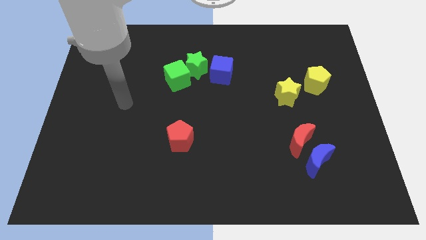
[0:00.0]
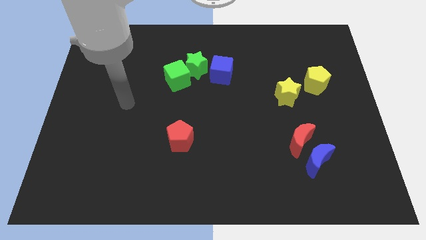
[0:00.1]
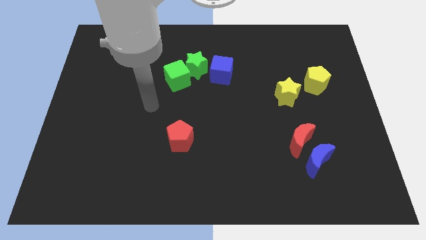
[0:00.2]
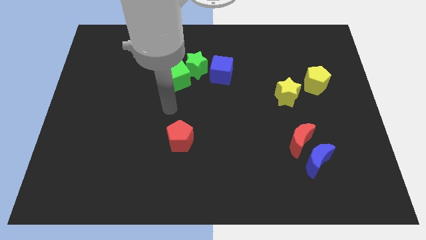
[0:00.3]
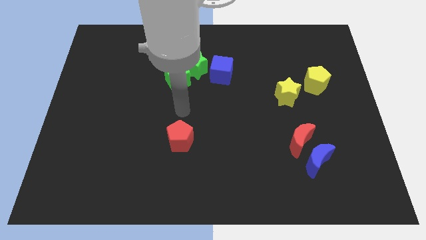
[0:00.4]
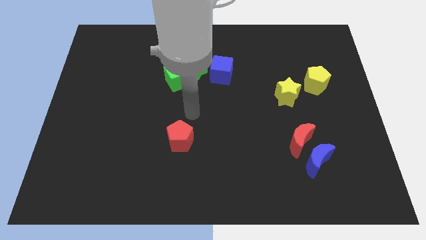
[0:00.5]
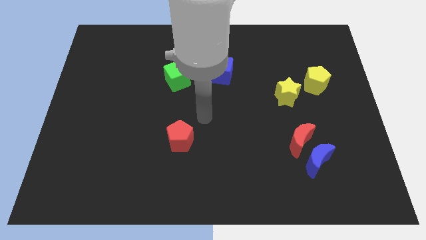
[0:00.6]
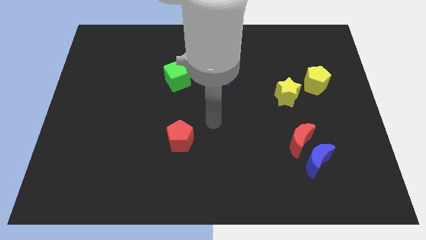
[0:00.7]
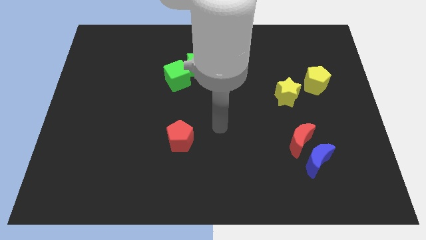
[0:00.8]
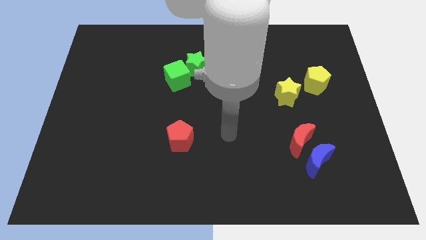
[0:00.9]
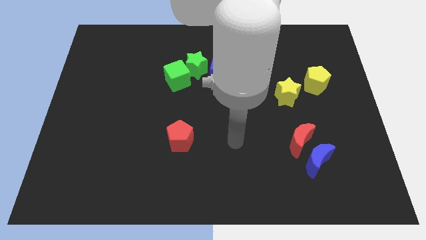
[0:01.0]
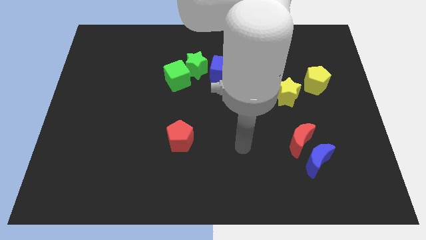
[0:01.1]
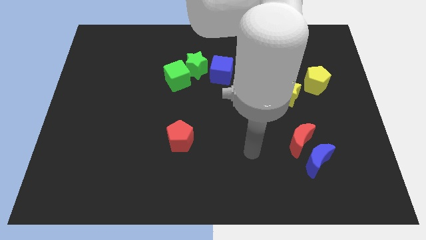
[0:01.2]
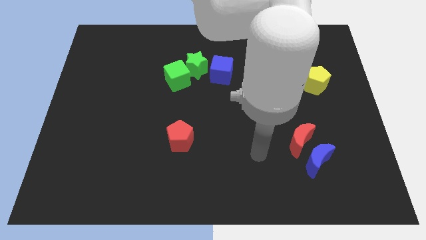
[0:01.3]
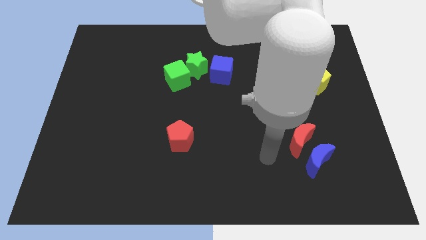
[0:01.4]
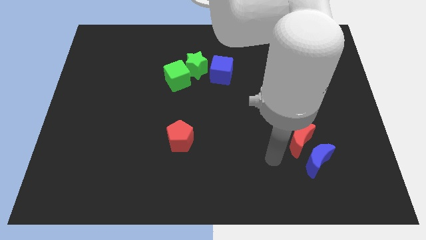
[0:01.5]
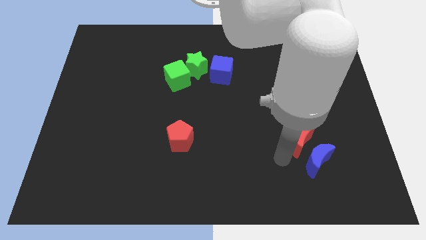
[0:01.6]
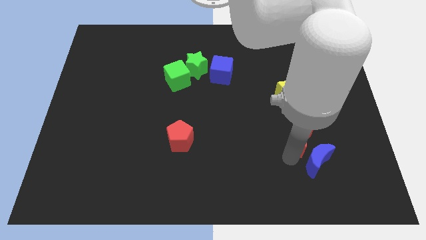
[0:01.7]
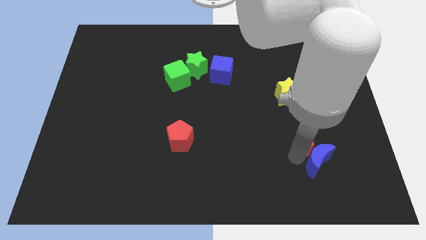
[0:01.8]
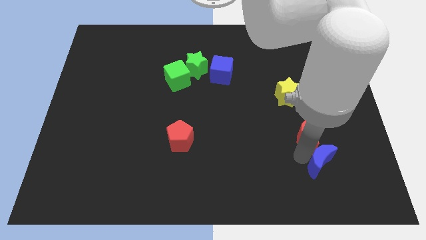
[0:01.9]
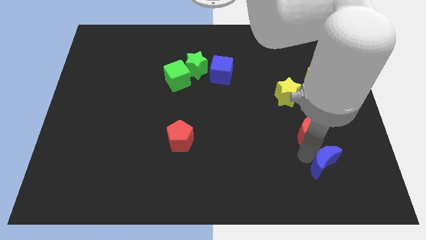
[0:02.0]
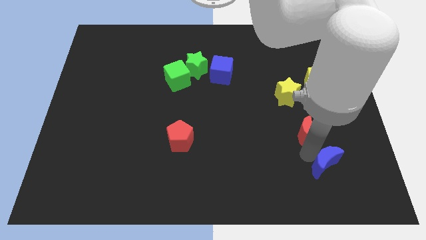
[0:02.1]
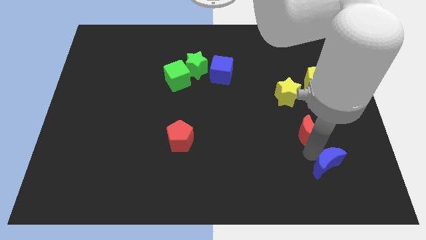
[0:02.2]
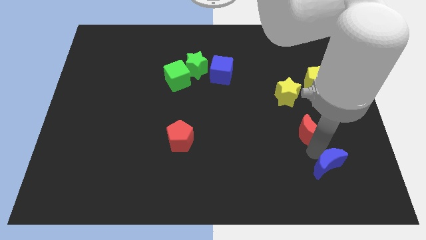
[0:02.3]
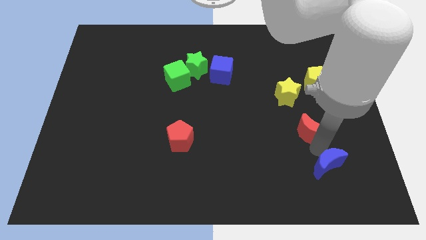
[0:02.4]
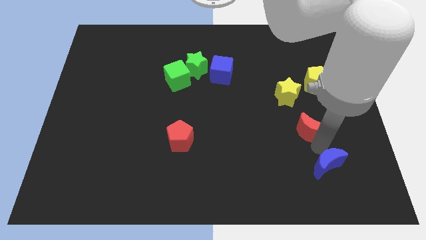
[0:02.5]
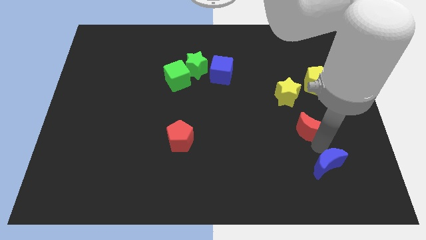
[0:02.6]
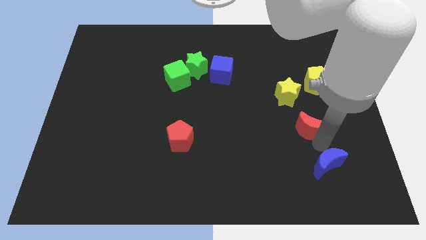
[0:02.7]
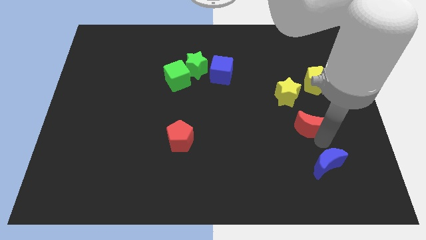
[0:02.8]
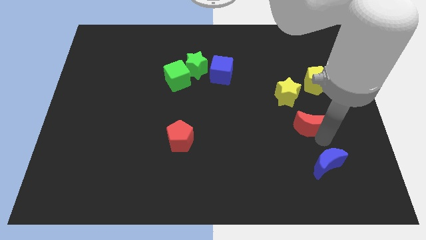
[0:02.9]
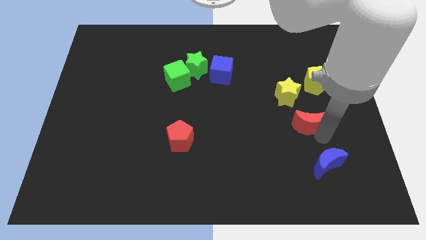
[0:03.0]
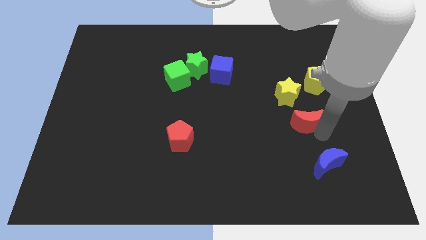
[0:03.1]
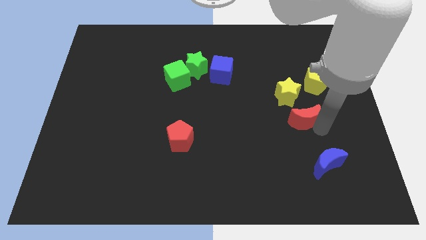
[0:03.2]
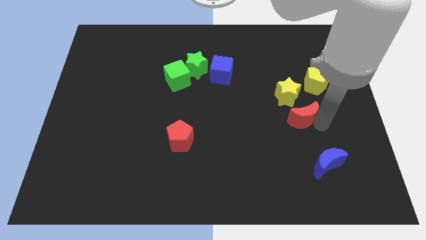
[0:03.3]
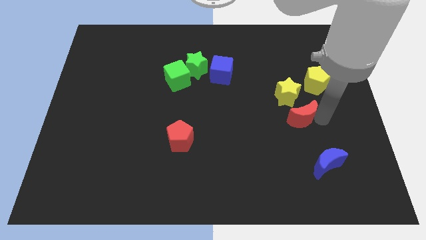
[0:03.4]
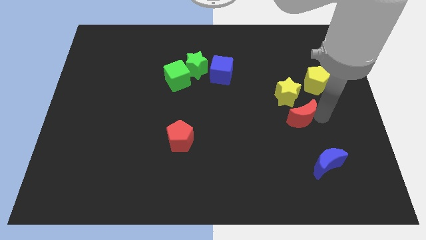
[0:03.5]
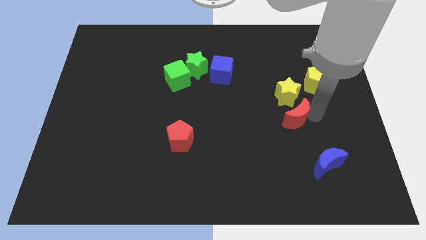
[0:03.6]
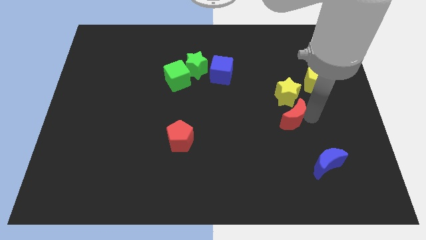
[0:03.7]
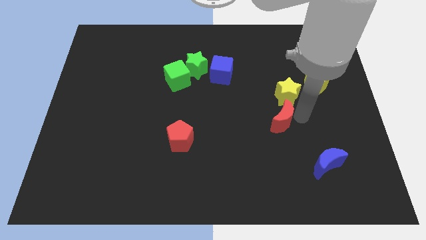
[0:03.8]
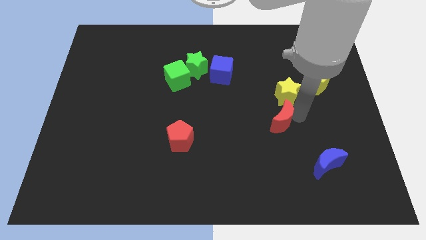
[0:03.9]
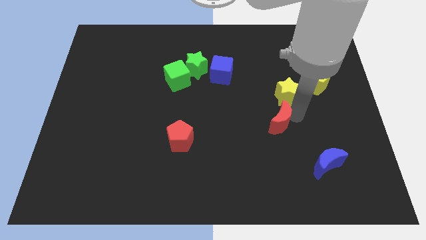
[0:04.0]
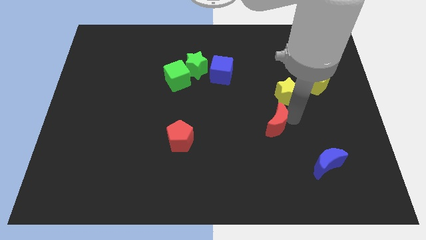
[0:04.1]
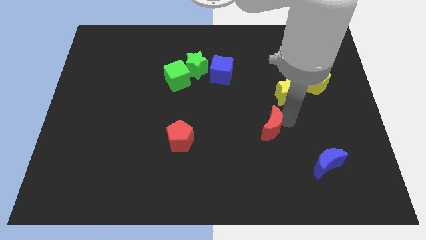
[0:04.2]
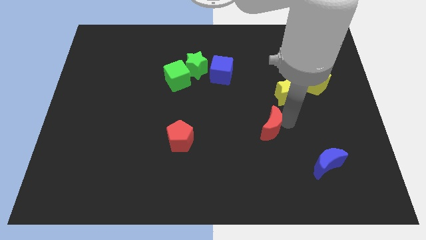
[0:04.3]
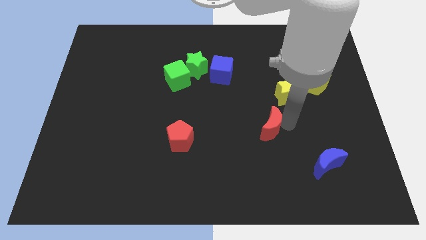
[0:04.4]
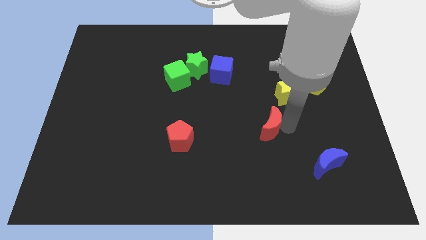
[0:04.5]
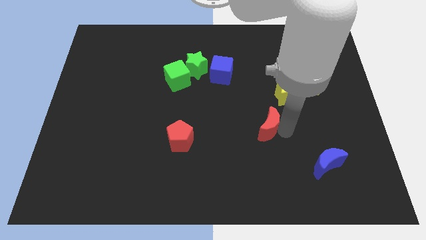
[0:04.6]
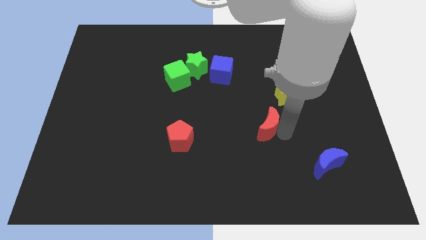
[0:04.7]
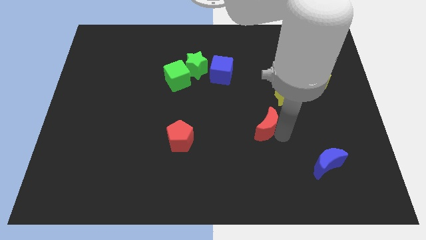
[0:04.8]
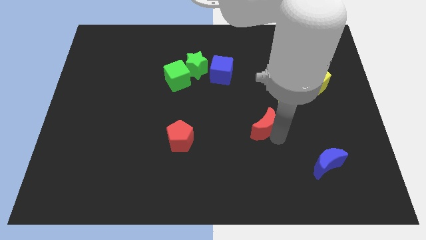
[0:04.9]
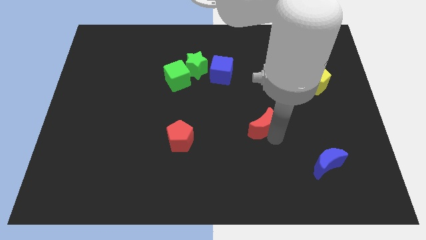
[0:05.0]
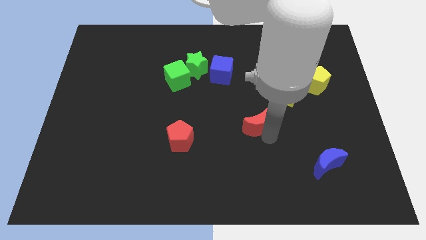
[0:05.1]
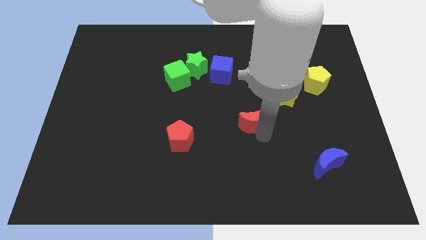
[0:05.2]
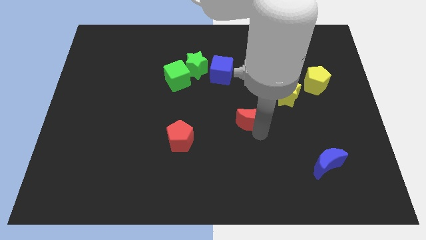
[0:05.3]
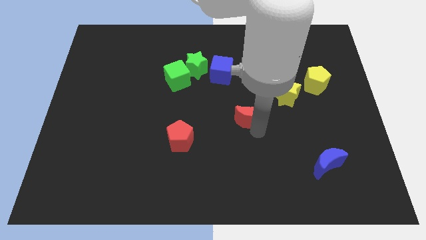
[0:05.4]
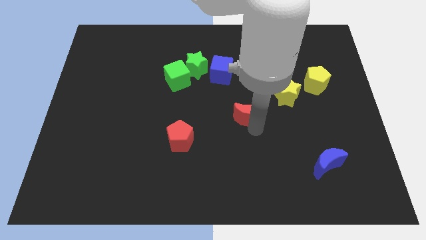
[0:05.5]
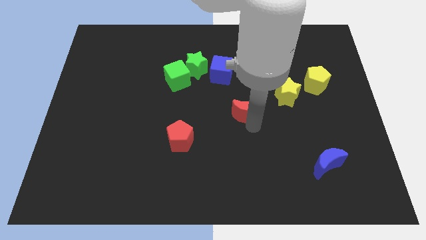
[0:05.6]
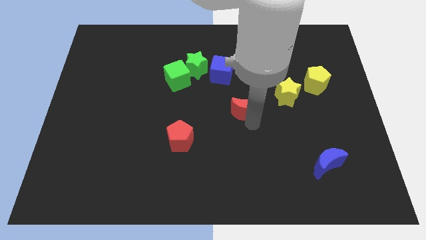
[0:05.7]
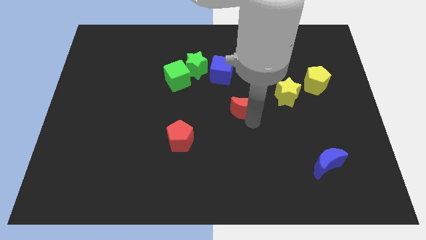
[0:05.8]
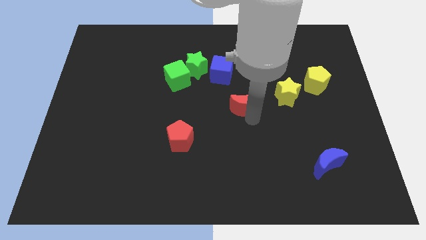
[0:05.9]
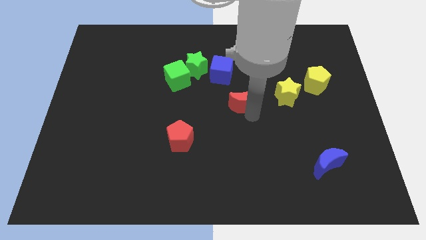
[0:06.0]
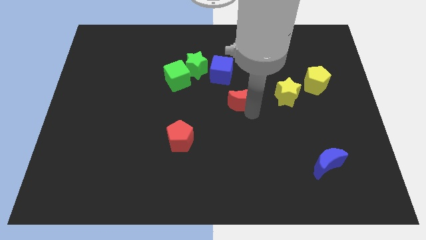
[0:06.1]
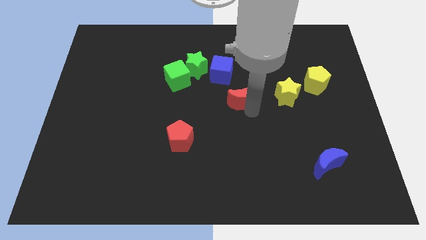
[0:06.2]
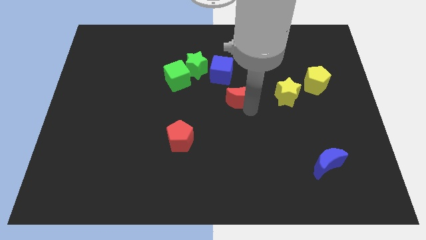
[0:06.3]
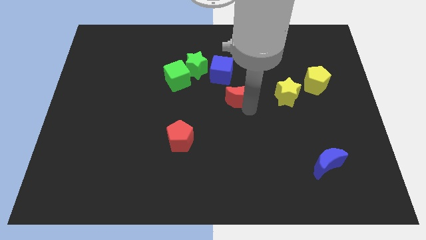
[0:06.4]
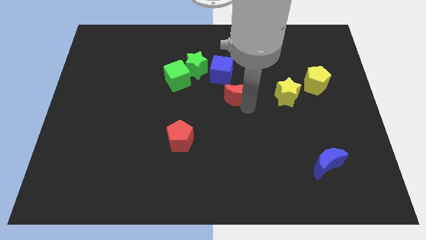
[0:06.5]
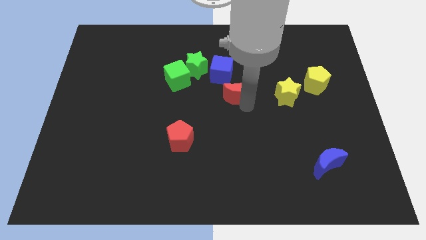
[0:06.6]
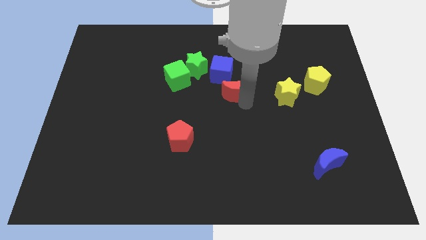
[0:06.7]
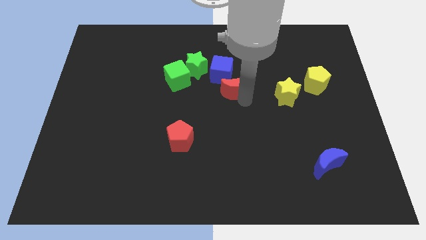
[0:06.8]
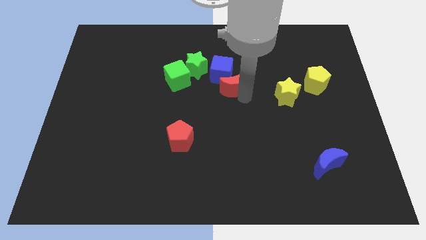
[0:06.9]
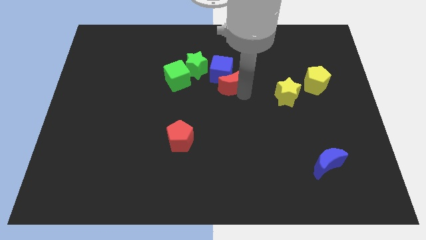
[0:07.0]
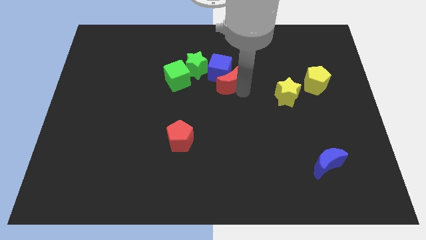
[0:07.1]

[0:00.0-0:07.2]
slide the red moon towards the blue cube

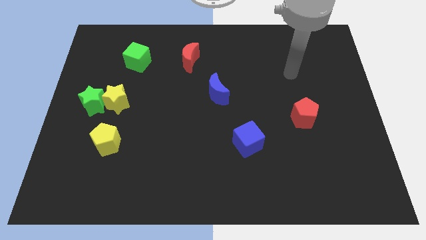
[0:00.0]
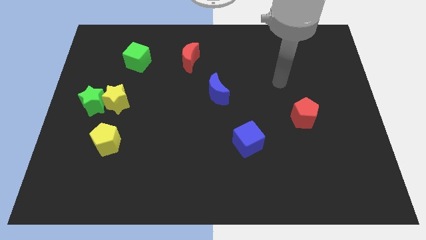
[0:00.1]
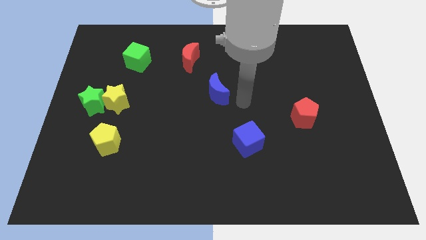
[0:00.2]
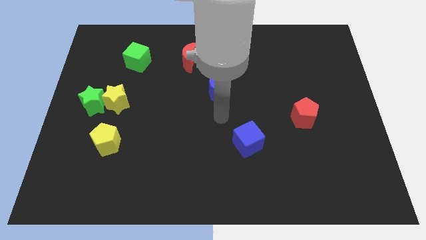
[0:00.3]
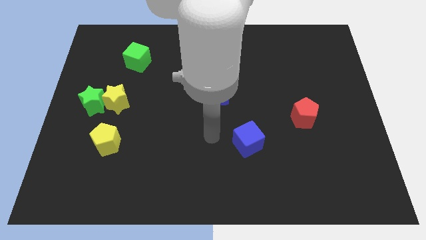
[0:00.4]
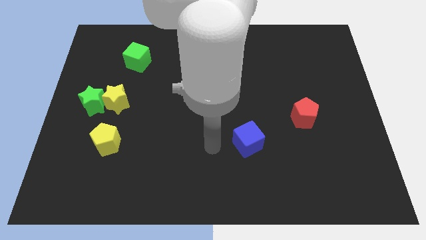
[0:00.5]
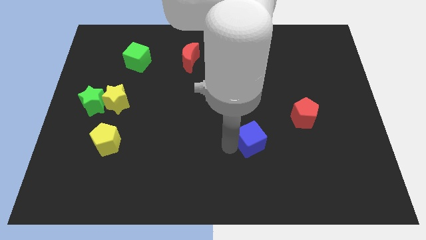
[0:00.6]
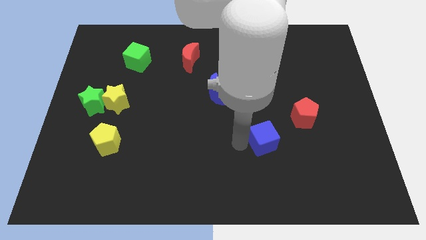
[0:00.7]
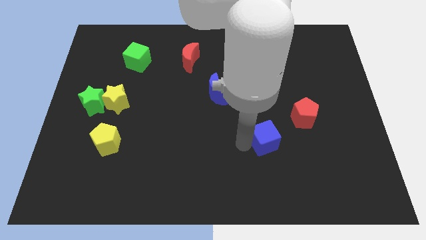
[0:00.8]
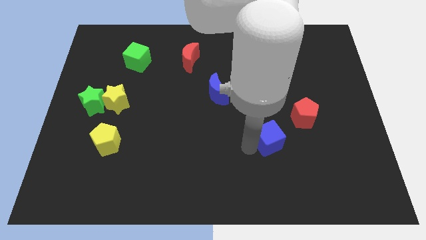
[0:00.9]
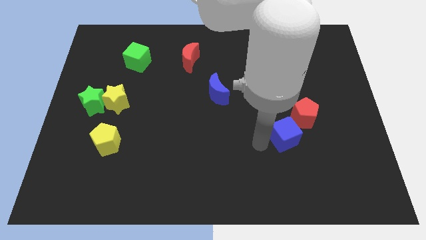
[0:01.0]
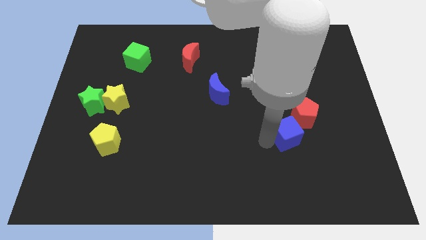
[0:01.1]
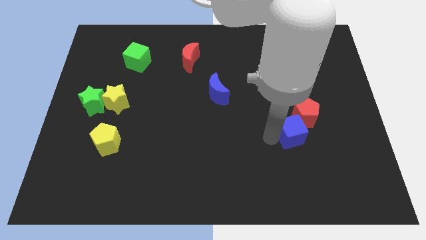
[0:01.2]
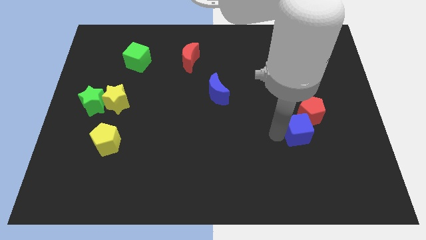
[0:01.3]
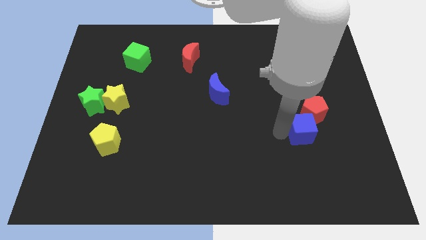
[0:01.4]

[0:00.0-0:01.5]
move the blue cube close to the red pentagon
